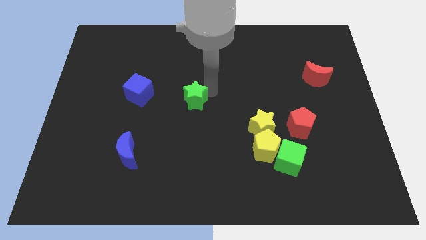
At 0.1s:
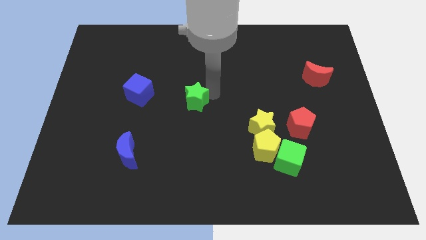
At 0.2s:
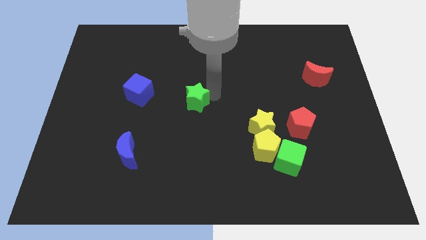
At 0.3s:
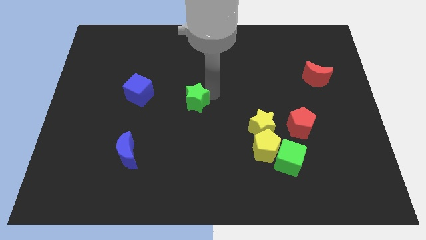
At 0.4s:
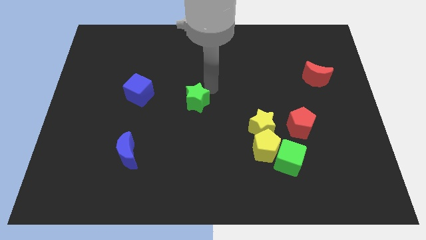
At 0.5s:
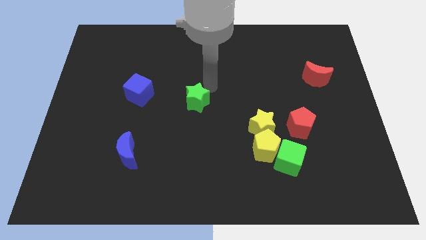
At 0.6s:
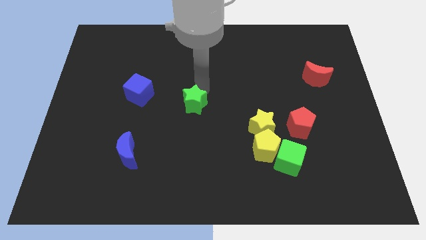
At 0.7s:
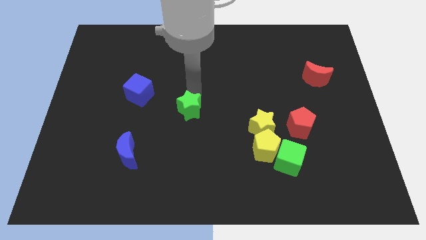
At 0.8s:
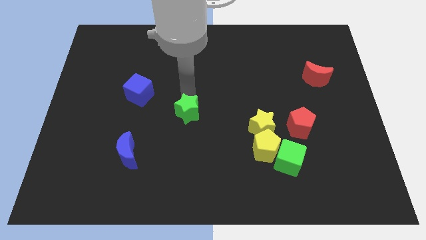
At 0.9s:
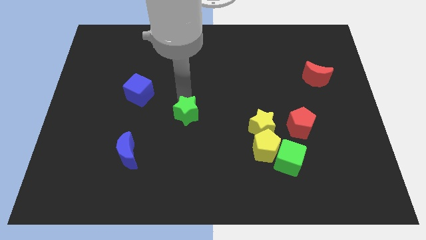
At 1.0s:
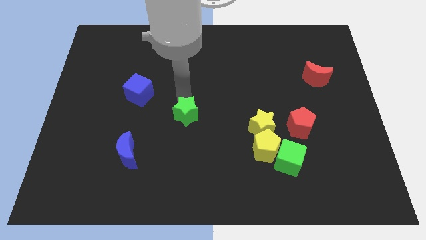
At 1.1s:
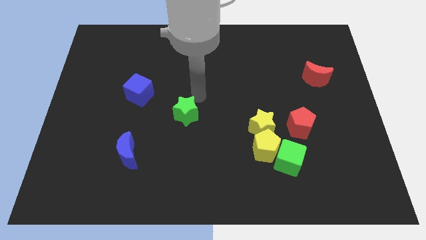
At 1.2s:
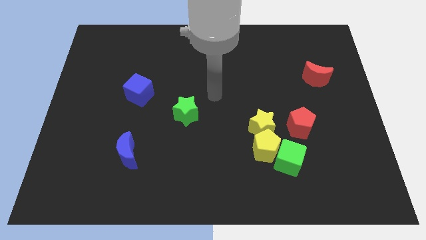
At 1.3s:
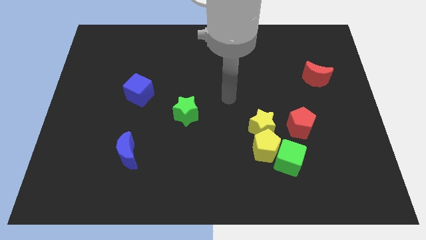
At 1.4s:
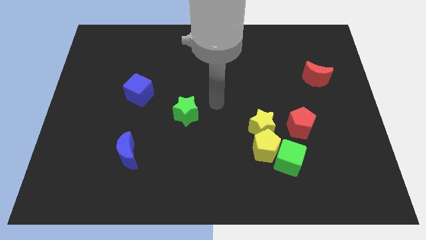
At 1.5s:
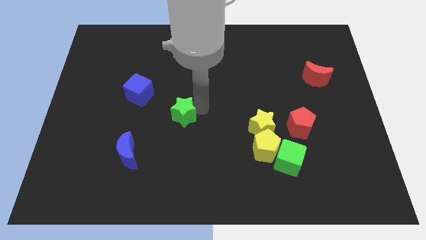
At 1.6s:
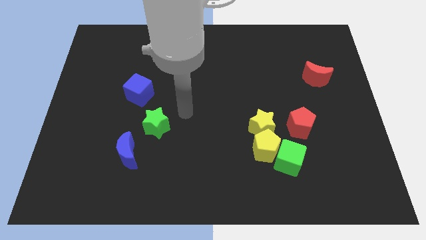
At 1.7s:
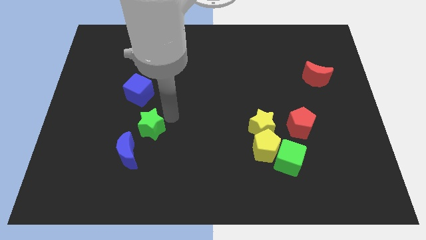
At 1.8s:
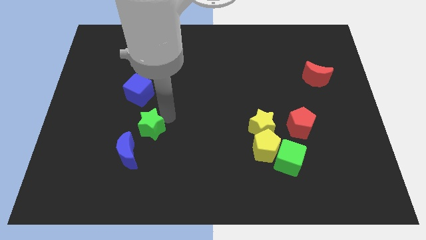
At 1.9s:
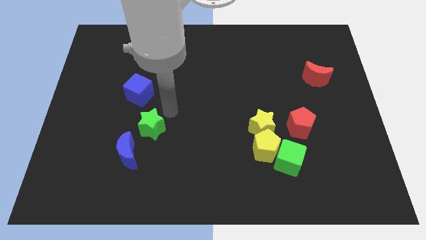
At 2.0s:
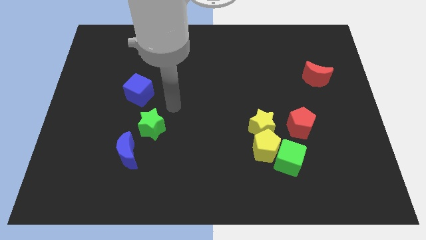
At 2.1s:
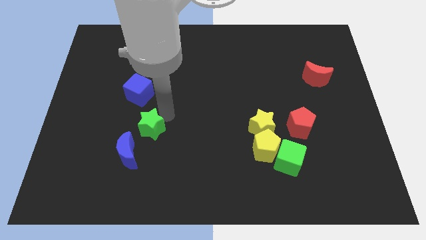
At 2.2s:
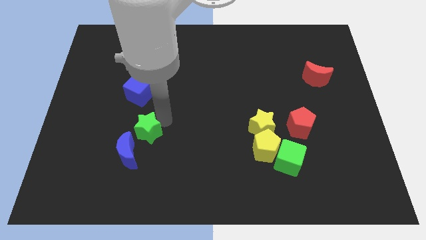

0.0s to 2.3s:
place the green star close to the blue moon

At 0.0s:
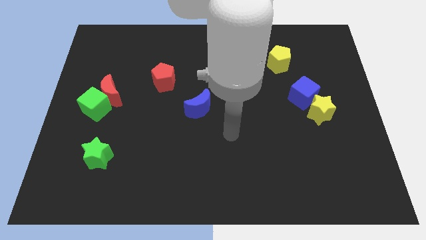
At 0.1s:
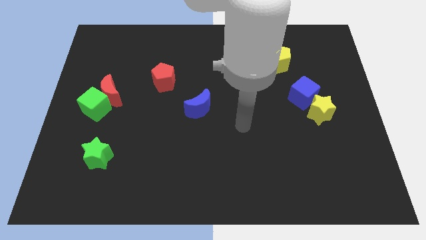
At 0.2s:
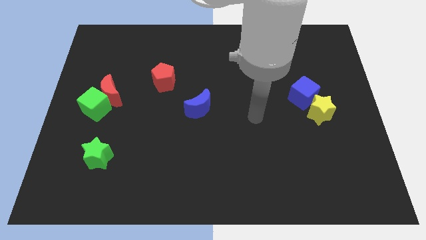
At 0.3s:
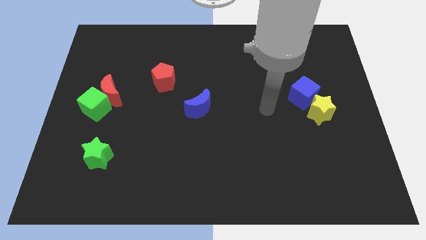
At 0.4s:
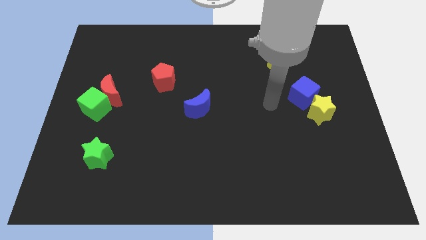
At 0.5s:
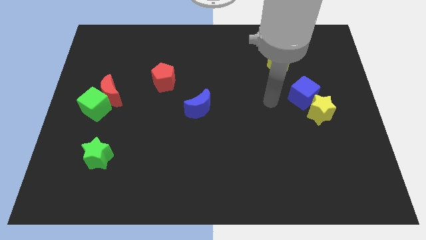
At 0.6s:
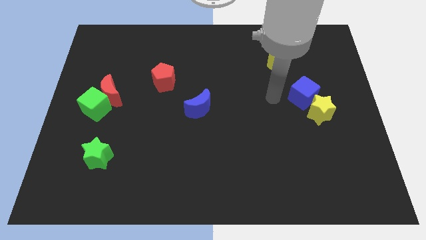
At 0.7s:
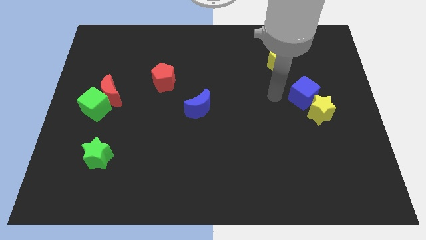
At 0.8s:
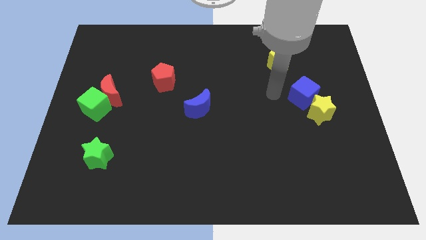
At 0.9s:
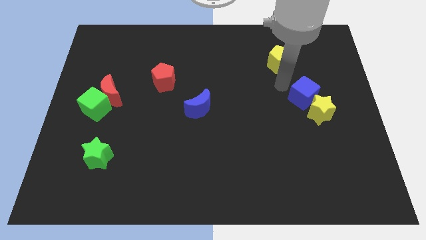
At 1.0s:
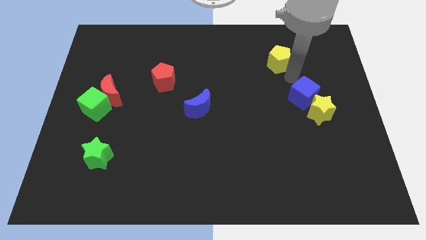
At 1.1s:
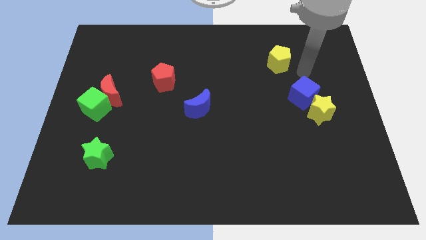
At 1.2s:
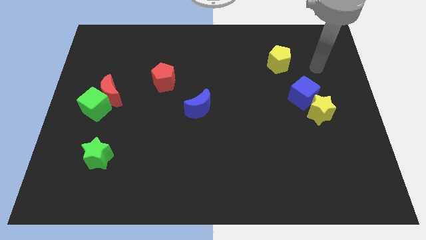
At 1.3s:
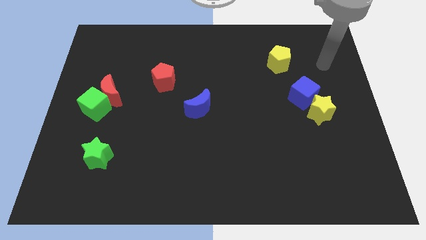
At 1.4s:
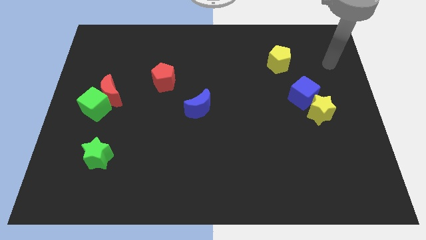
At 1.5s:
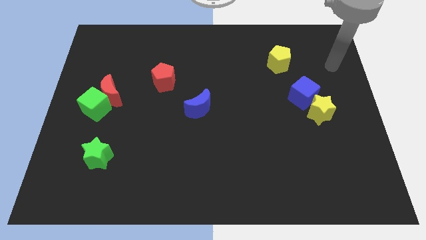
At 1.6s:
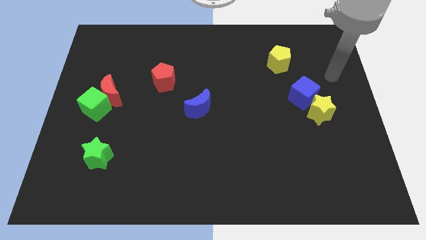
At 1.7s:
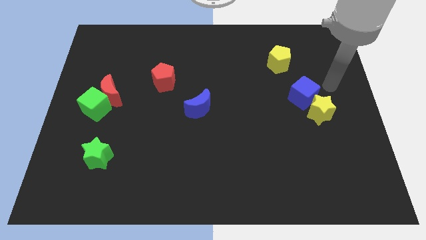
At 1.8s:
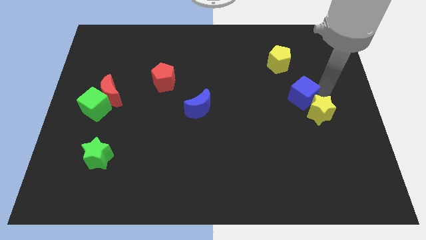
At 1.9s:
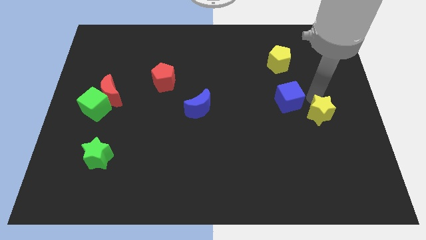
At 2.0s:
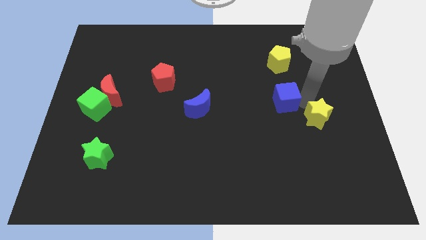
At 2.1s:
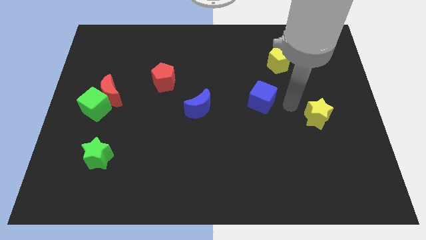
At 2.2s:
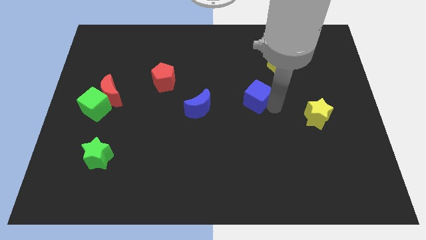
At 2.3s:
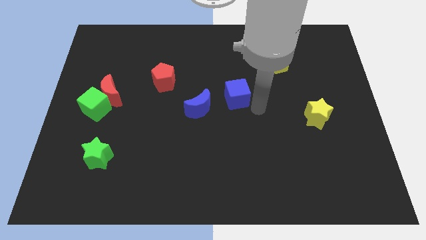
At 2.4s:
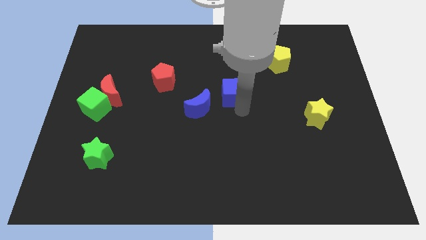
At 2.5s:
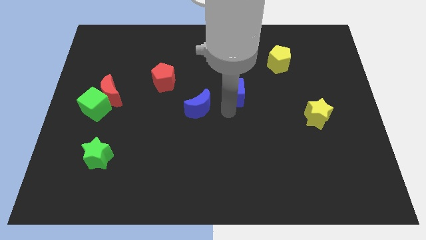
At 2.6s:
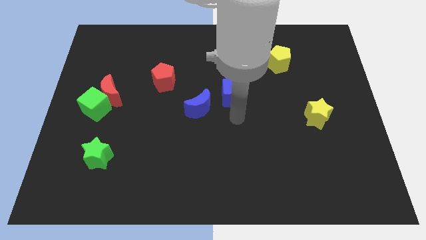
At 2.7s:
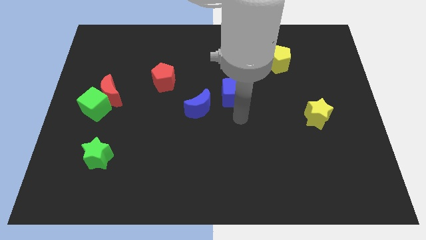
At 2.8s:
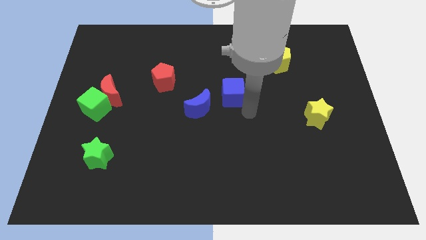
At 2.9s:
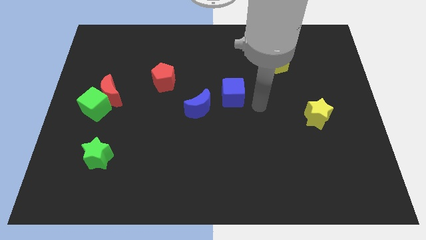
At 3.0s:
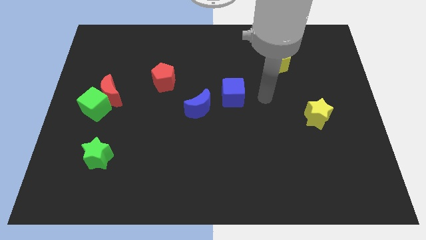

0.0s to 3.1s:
place blue cube on the right side of the blue crescent

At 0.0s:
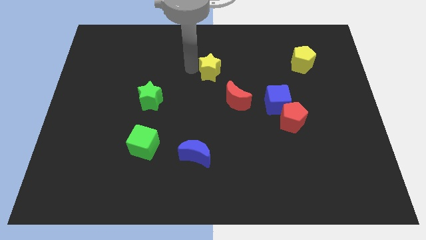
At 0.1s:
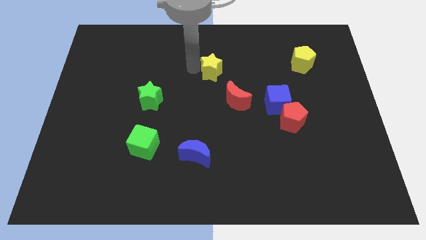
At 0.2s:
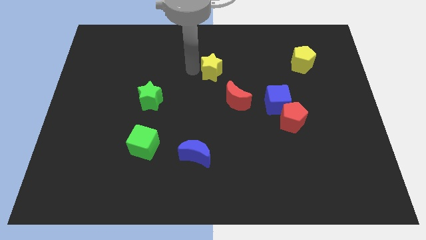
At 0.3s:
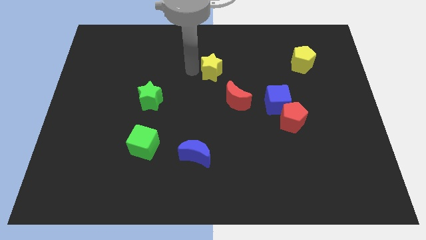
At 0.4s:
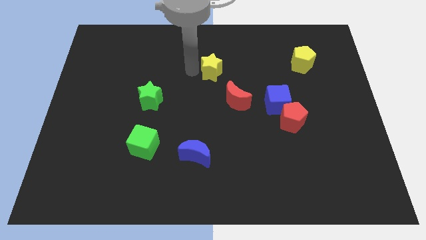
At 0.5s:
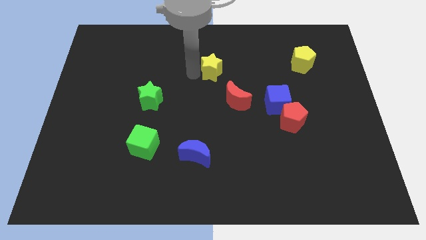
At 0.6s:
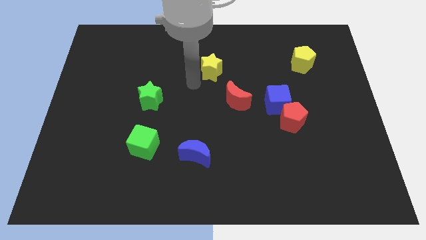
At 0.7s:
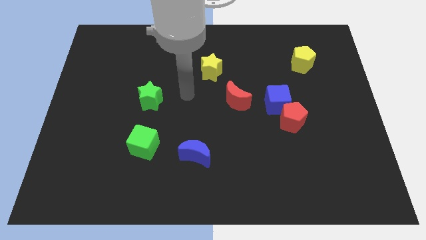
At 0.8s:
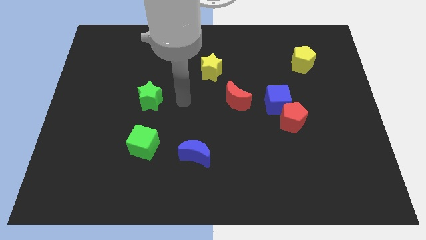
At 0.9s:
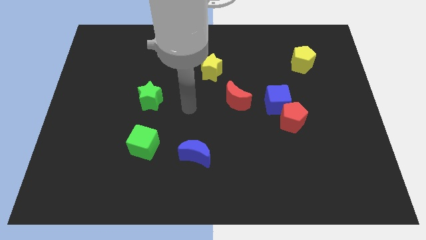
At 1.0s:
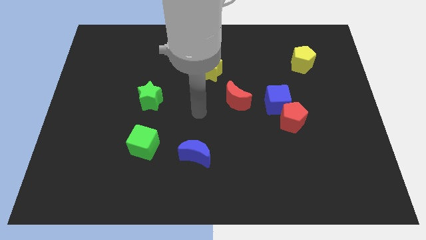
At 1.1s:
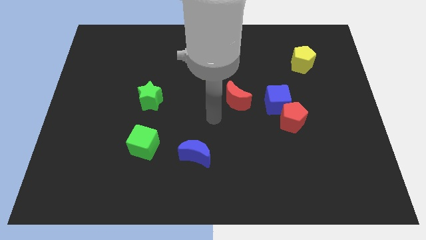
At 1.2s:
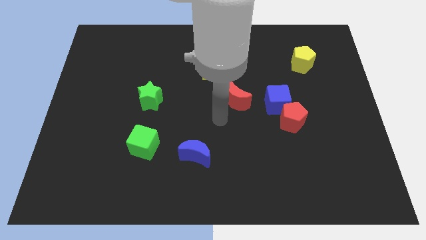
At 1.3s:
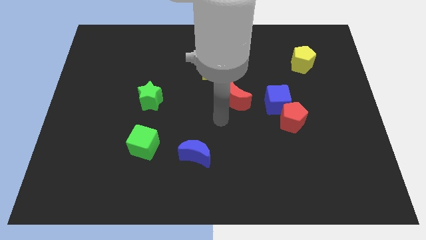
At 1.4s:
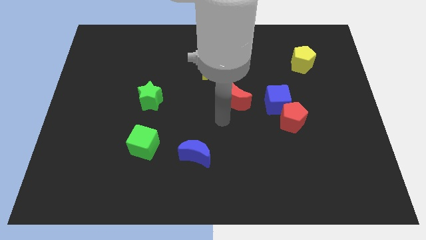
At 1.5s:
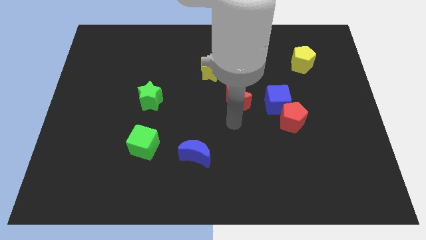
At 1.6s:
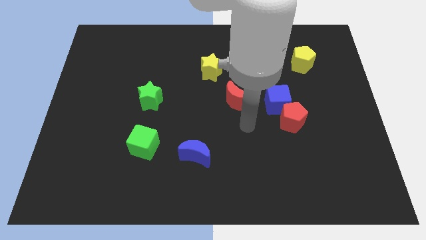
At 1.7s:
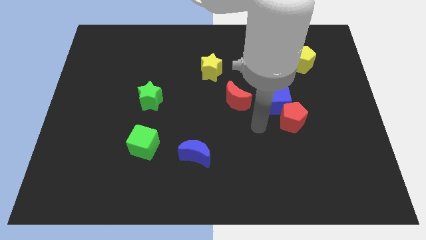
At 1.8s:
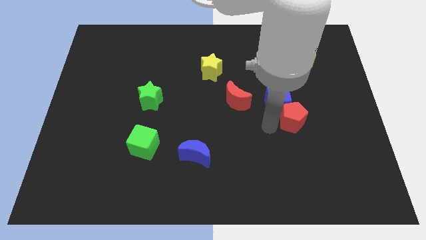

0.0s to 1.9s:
point the arm at the left side of the red pentagon

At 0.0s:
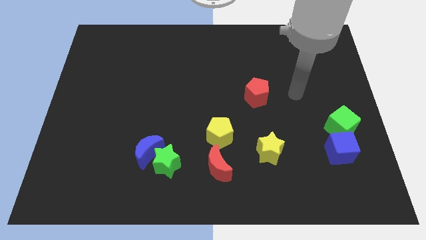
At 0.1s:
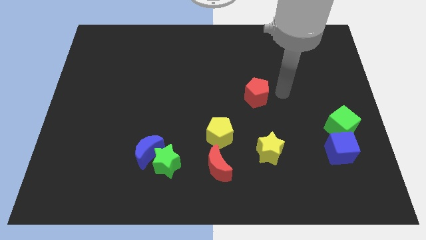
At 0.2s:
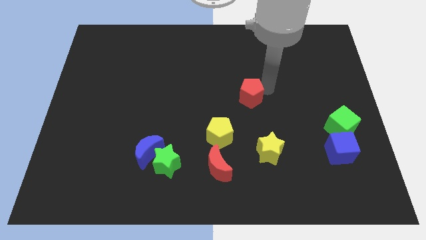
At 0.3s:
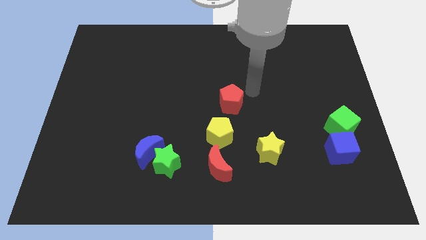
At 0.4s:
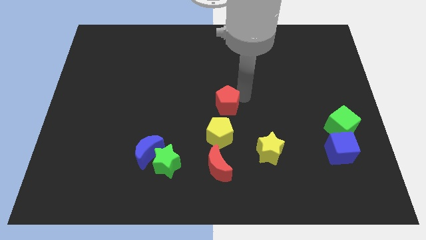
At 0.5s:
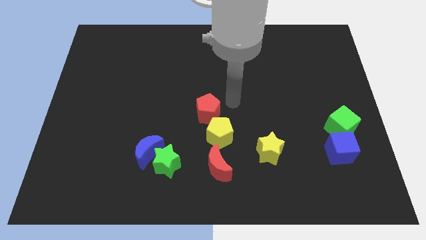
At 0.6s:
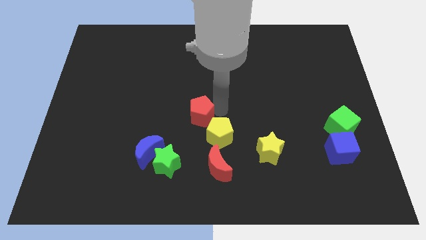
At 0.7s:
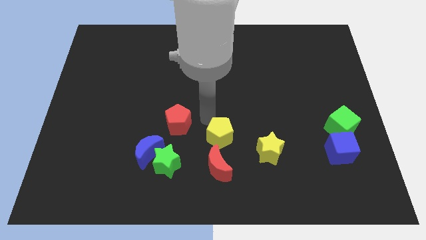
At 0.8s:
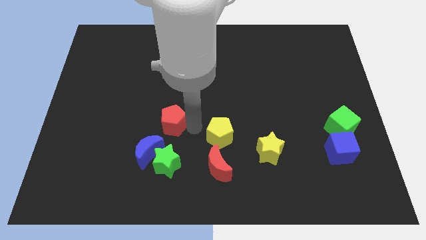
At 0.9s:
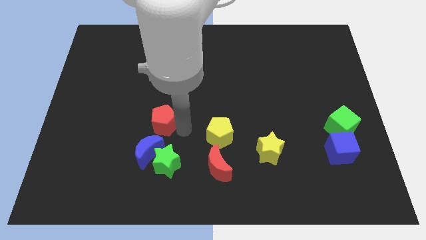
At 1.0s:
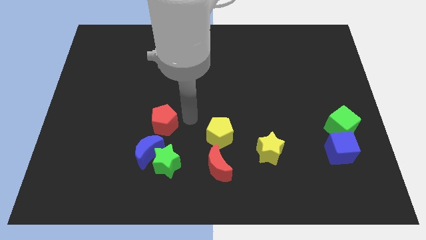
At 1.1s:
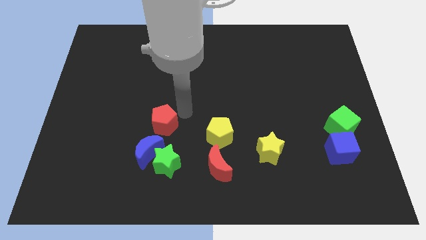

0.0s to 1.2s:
move the red pentagon above the blue crescent

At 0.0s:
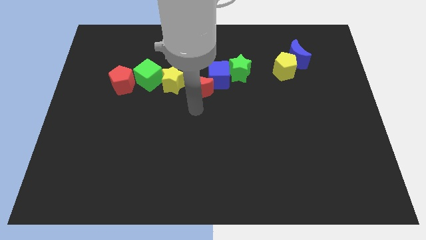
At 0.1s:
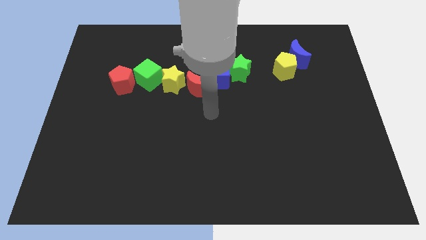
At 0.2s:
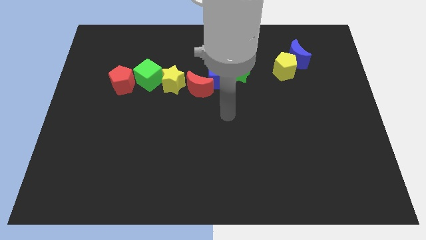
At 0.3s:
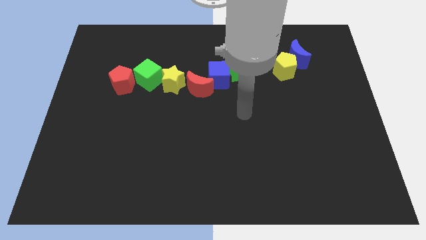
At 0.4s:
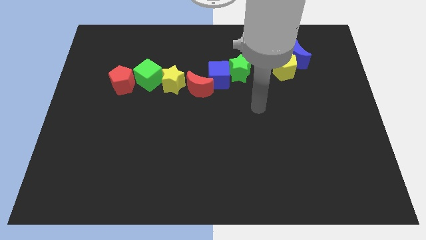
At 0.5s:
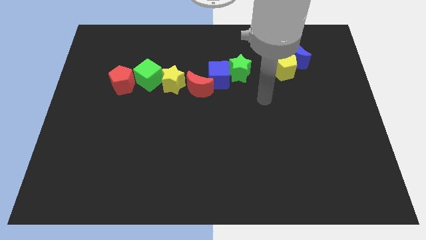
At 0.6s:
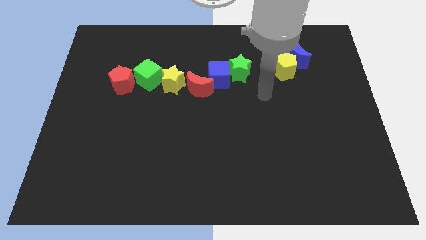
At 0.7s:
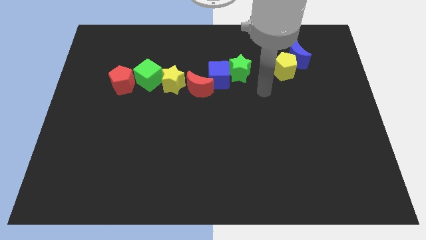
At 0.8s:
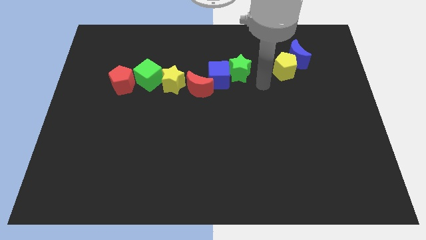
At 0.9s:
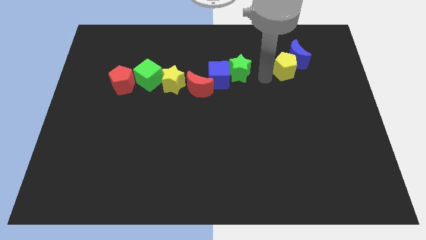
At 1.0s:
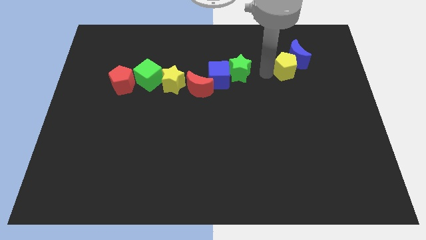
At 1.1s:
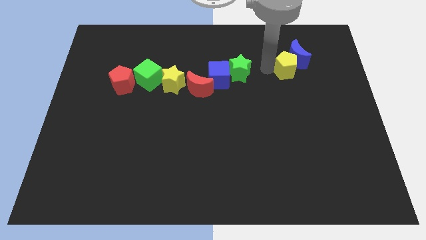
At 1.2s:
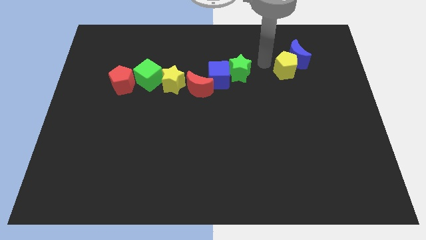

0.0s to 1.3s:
point the arm in between the yellow pentagon and the green star
